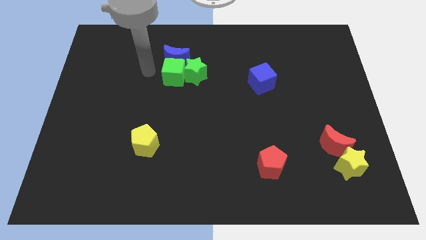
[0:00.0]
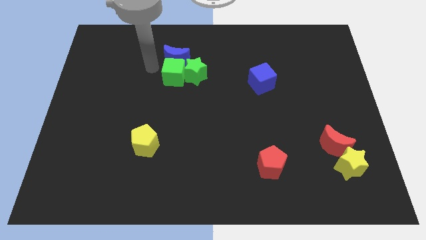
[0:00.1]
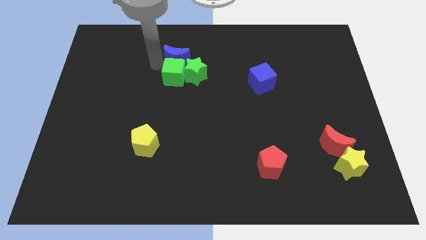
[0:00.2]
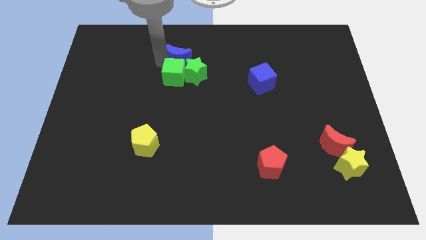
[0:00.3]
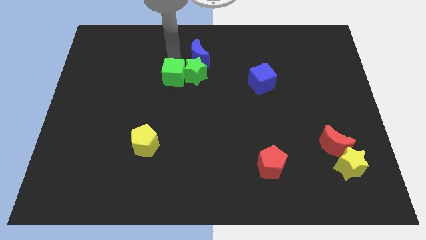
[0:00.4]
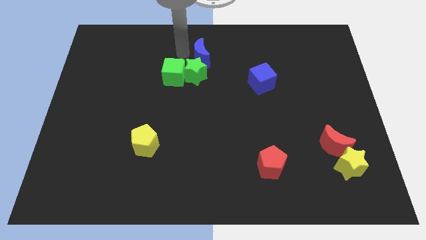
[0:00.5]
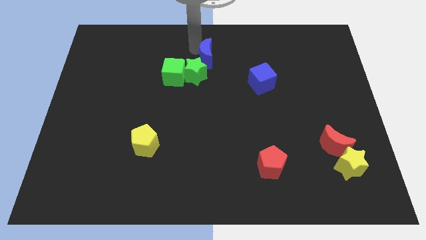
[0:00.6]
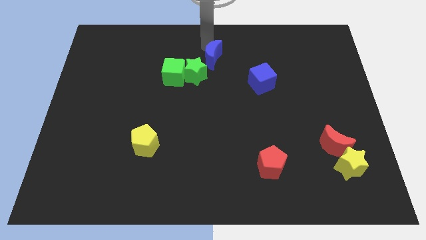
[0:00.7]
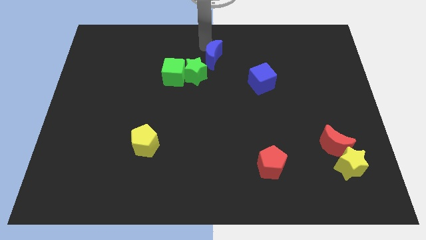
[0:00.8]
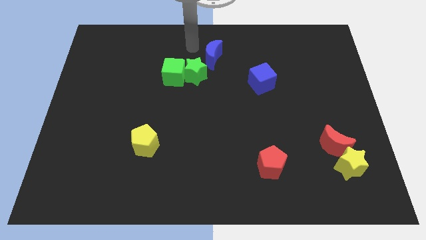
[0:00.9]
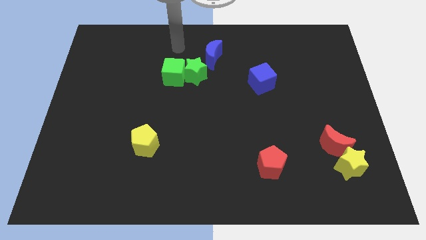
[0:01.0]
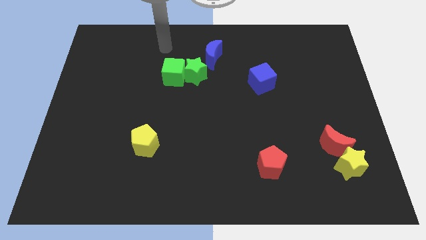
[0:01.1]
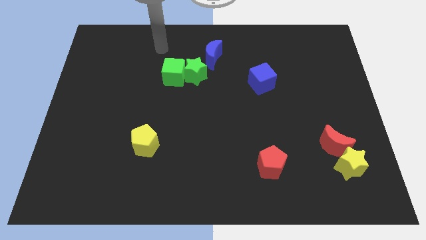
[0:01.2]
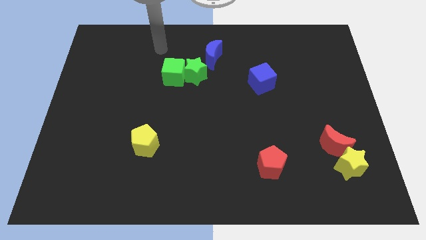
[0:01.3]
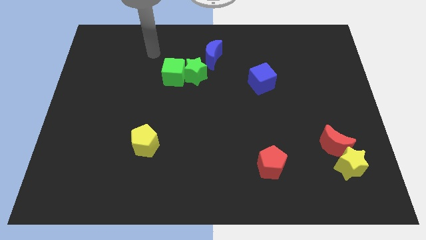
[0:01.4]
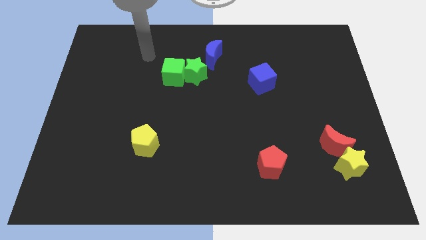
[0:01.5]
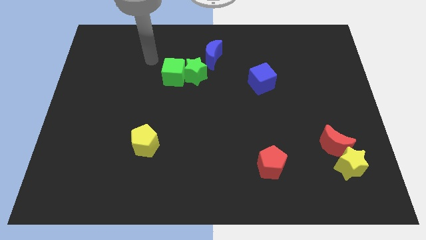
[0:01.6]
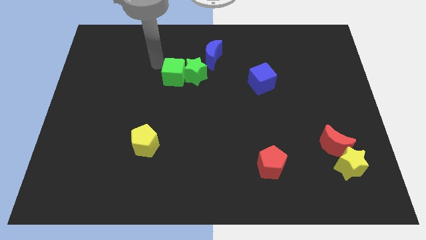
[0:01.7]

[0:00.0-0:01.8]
move the blue moon slightly to the right

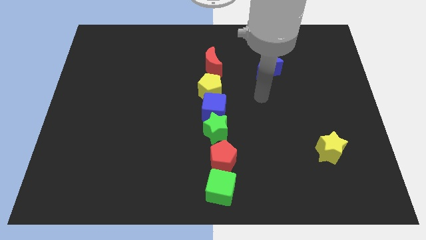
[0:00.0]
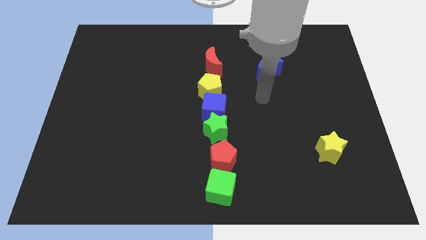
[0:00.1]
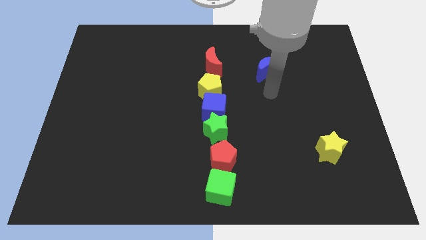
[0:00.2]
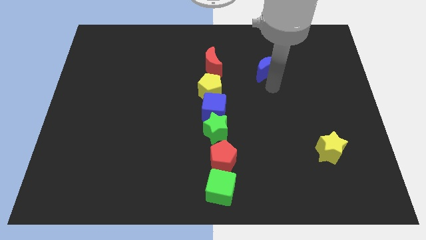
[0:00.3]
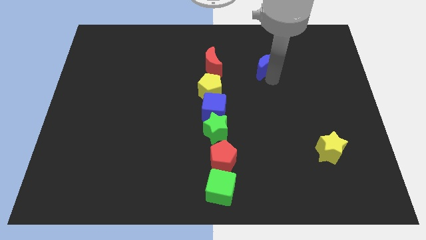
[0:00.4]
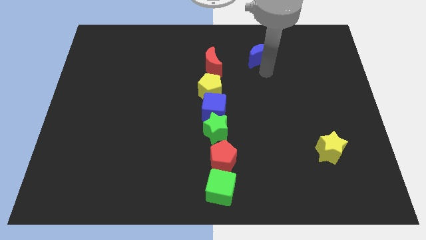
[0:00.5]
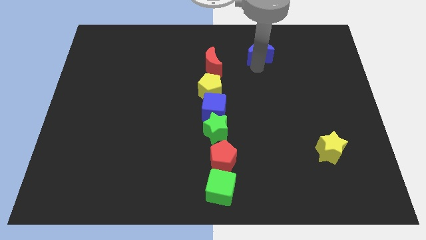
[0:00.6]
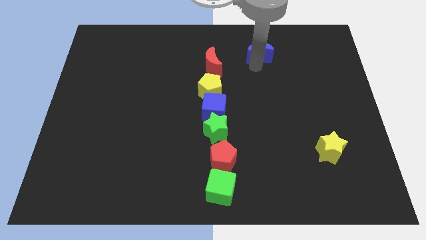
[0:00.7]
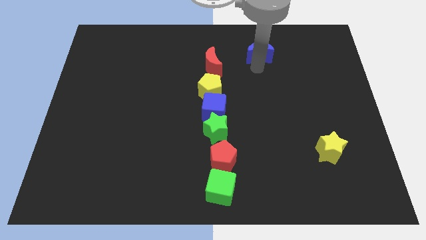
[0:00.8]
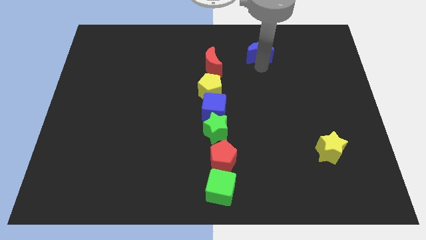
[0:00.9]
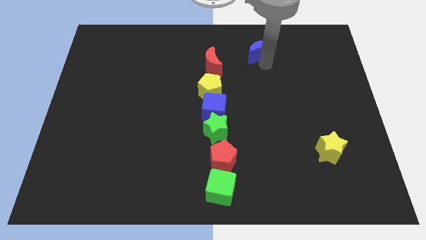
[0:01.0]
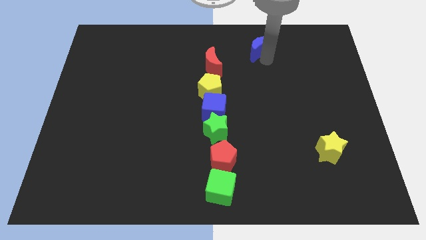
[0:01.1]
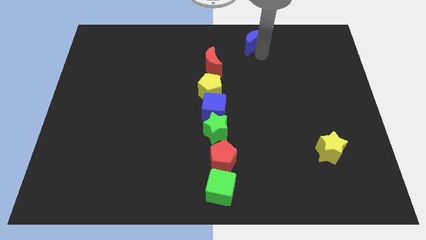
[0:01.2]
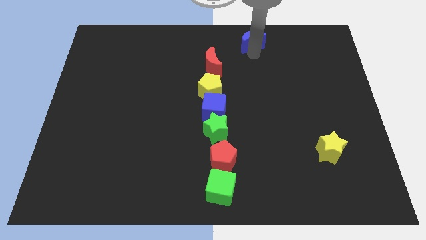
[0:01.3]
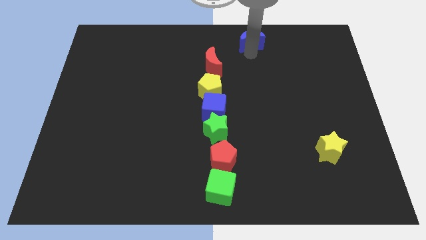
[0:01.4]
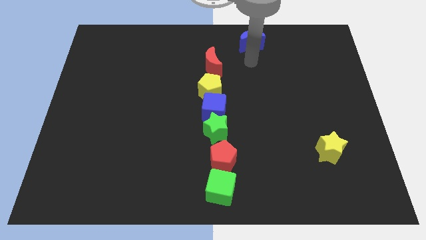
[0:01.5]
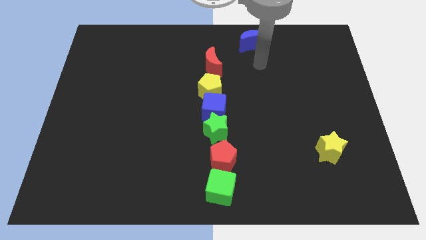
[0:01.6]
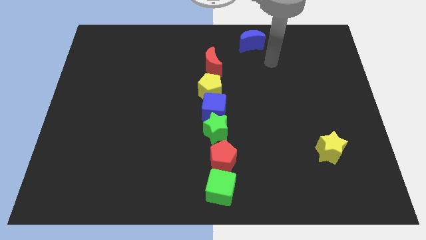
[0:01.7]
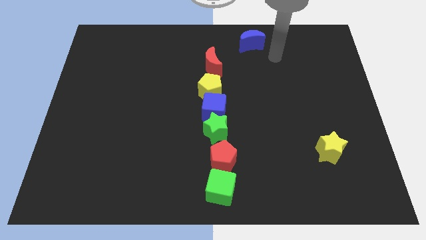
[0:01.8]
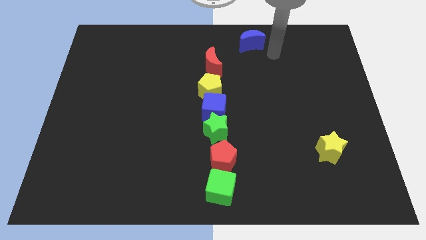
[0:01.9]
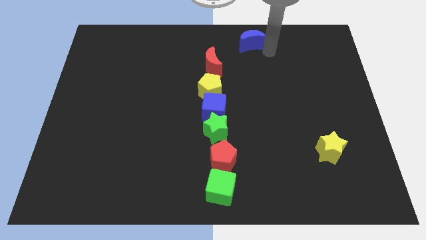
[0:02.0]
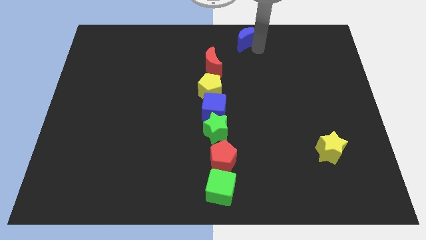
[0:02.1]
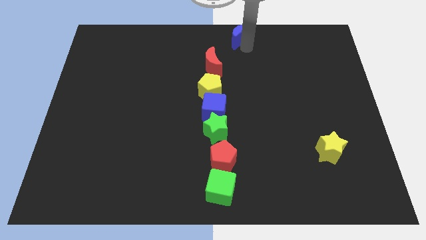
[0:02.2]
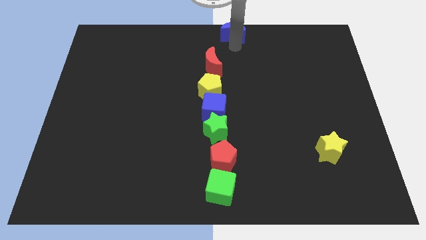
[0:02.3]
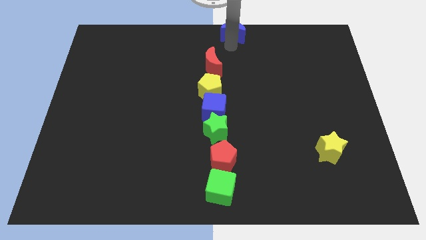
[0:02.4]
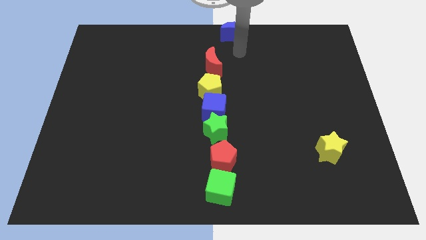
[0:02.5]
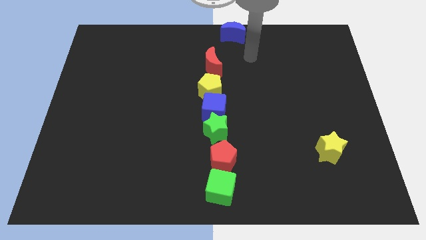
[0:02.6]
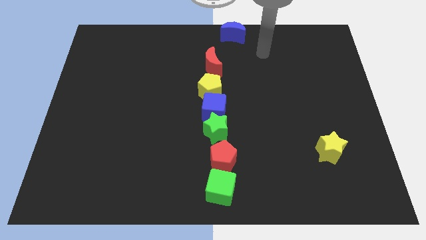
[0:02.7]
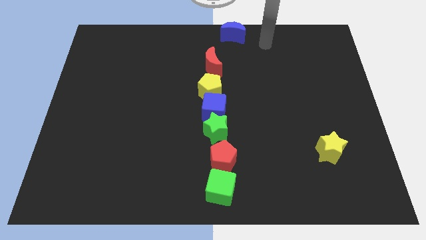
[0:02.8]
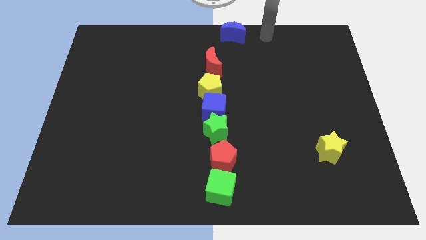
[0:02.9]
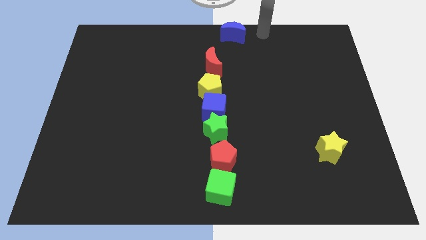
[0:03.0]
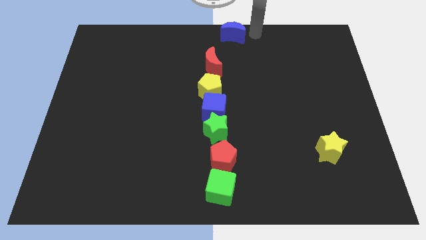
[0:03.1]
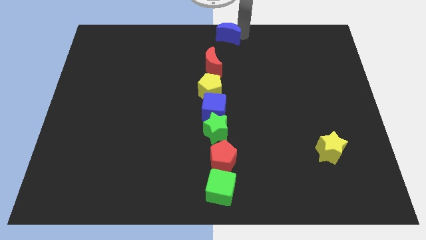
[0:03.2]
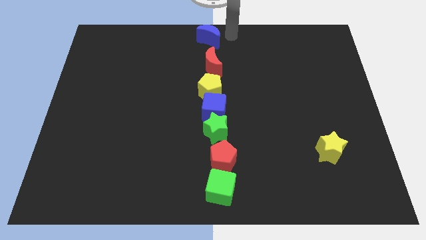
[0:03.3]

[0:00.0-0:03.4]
move blue moon to the top of the red moon

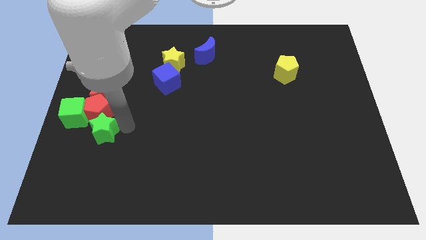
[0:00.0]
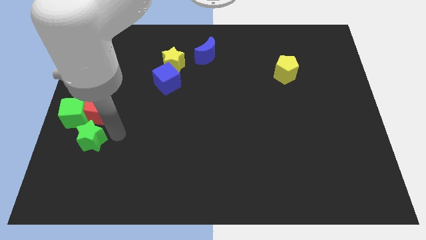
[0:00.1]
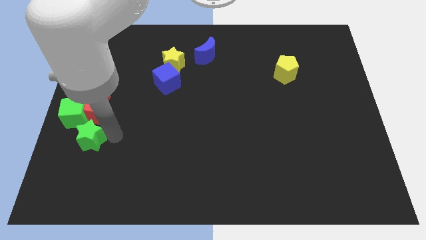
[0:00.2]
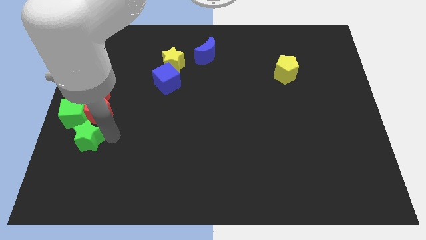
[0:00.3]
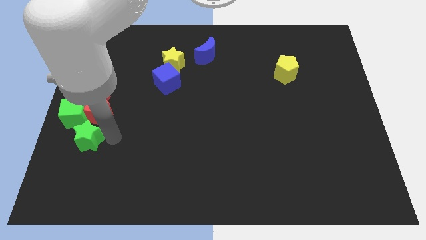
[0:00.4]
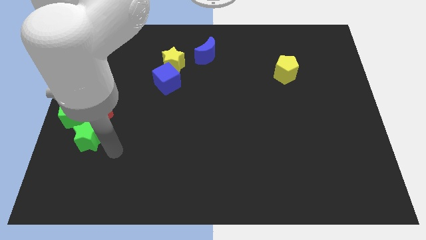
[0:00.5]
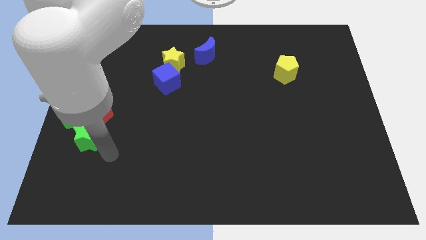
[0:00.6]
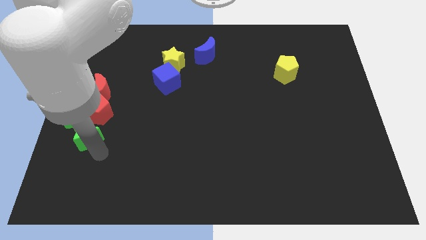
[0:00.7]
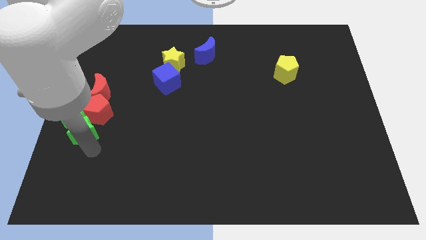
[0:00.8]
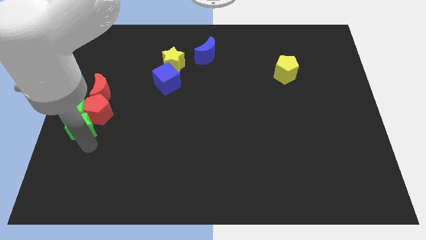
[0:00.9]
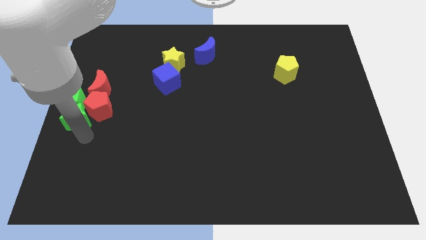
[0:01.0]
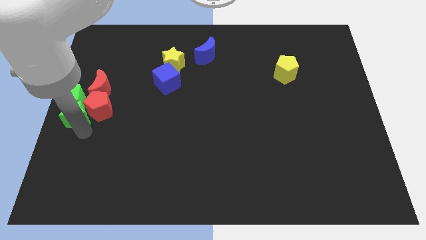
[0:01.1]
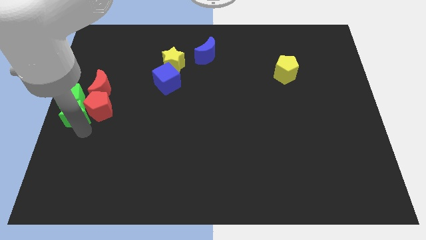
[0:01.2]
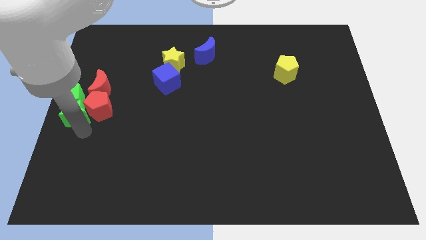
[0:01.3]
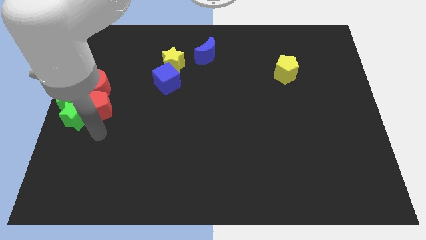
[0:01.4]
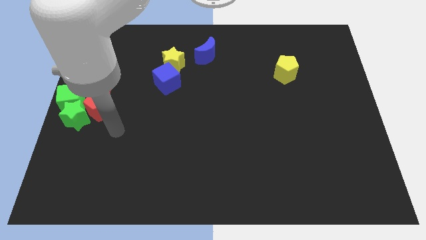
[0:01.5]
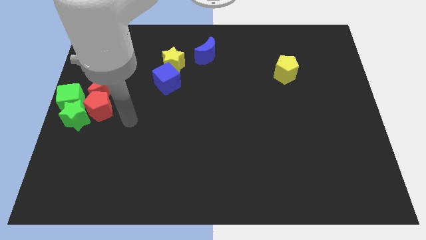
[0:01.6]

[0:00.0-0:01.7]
push green star into the green cube

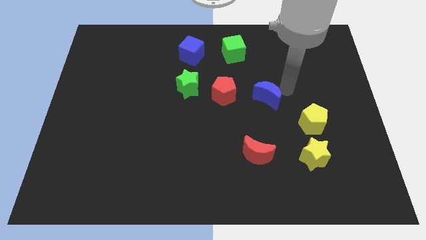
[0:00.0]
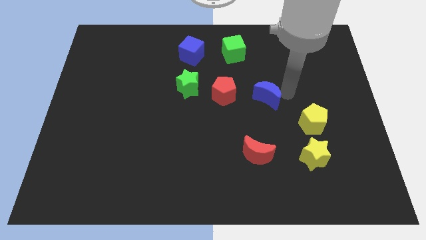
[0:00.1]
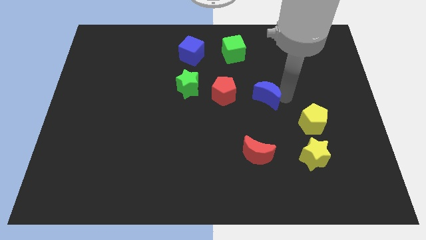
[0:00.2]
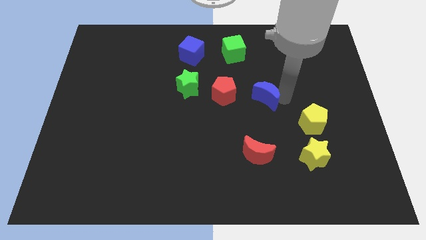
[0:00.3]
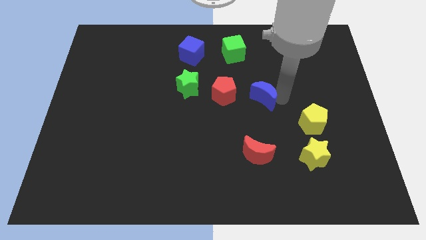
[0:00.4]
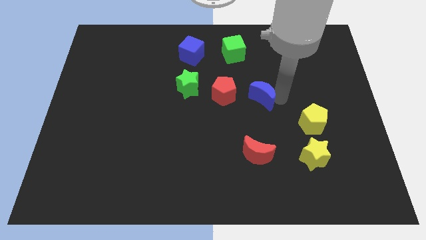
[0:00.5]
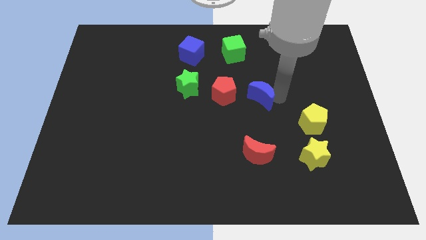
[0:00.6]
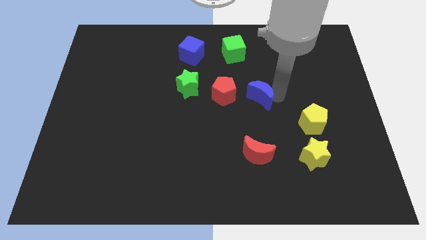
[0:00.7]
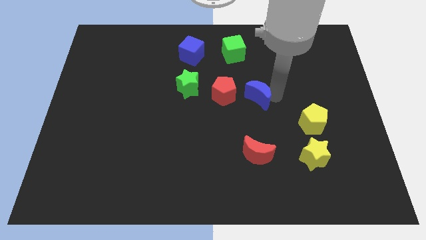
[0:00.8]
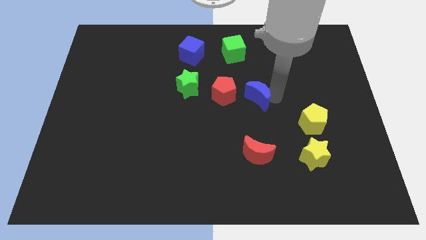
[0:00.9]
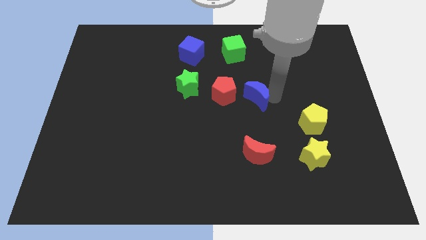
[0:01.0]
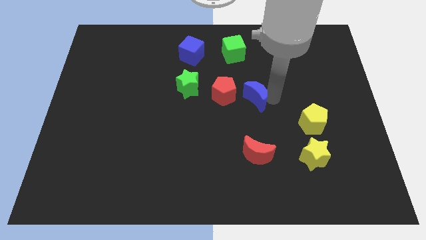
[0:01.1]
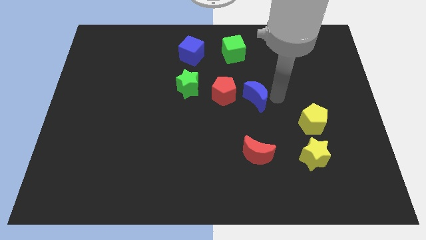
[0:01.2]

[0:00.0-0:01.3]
push the blue crescent into the red pentagon

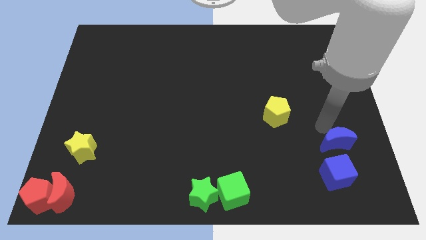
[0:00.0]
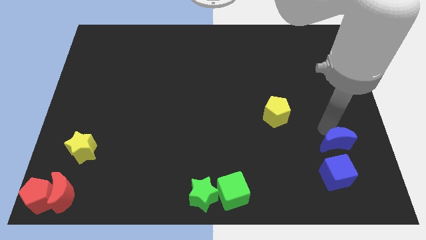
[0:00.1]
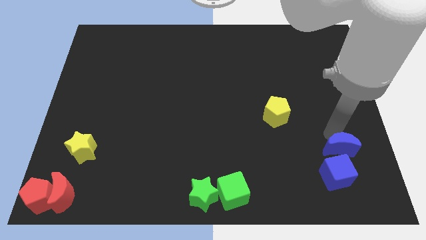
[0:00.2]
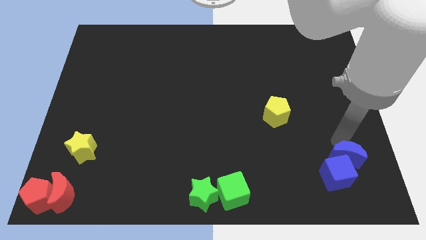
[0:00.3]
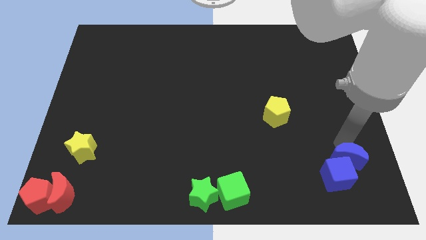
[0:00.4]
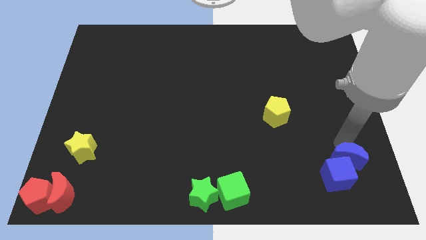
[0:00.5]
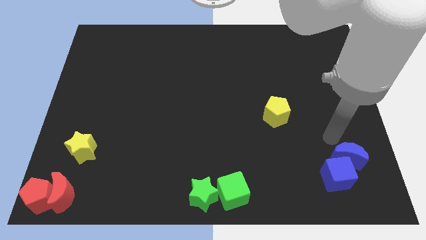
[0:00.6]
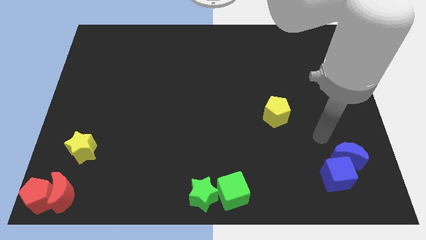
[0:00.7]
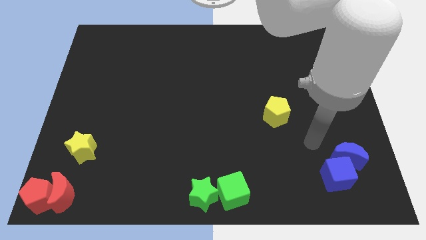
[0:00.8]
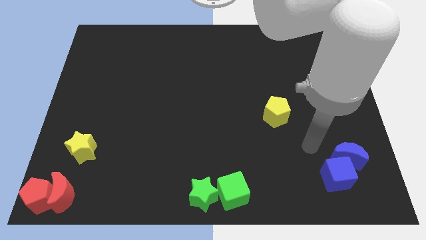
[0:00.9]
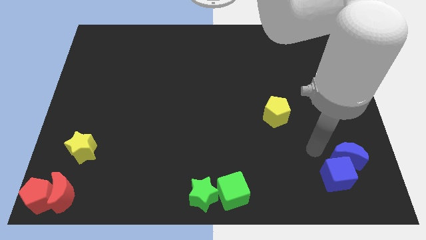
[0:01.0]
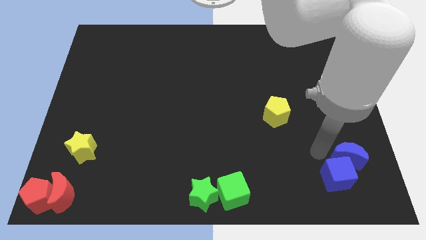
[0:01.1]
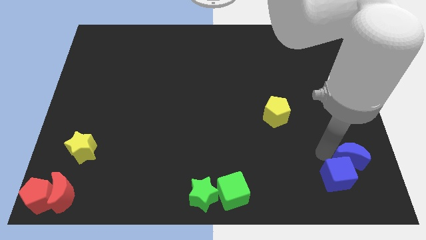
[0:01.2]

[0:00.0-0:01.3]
slightly push the blue crescent into the blue cube
